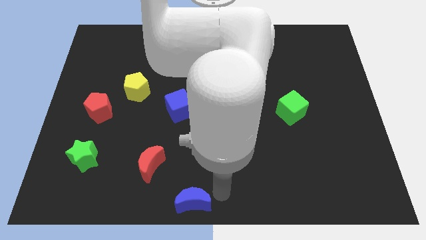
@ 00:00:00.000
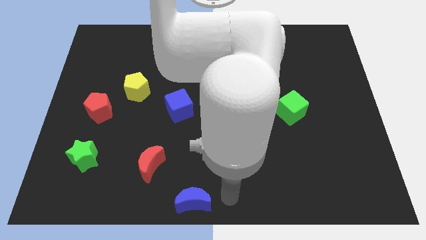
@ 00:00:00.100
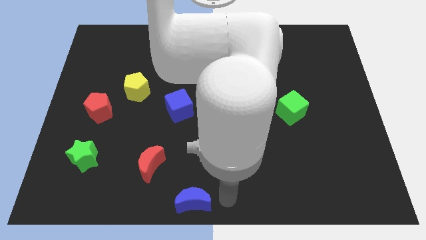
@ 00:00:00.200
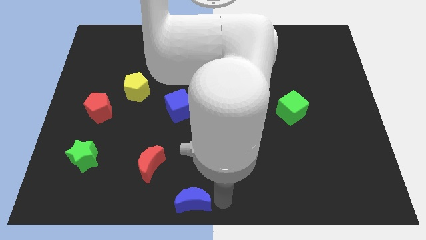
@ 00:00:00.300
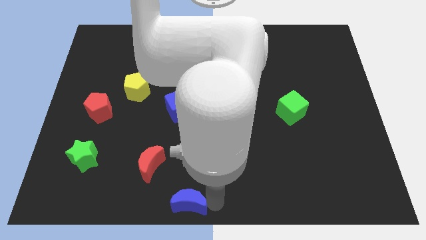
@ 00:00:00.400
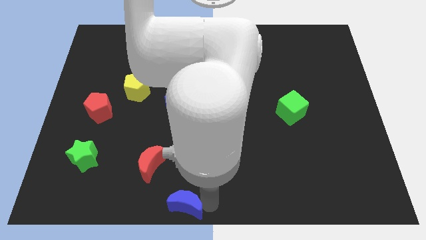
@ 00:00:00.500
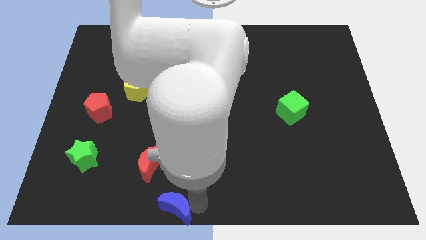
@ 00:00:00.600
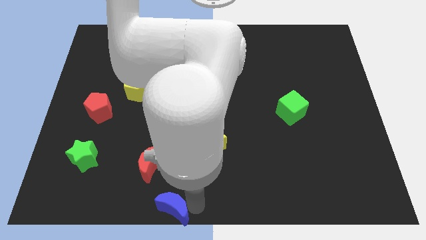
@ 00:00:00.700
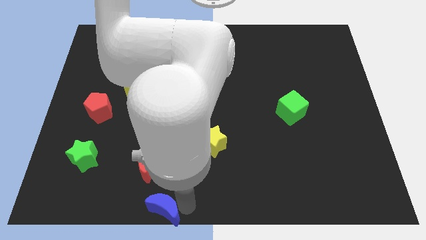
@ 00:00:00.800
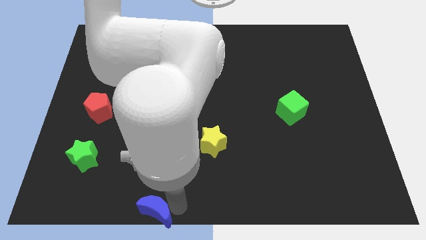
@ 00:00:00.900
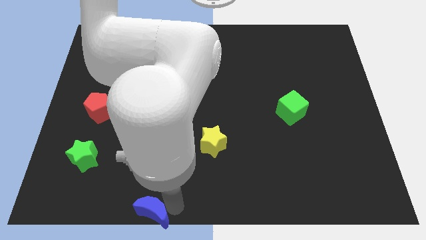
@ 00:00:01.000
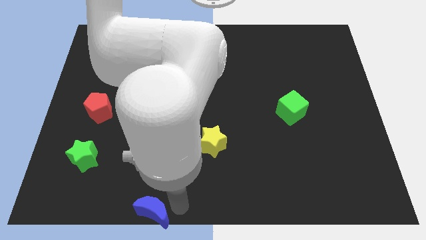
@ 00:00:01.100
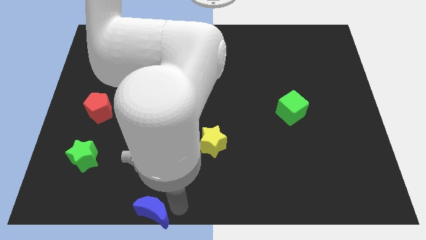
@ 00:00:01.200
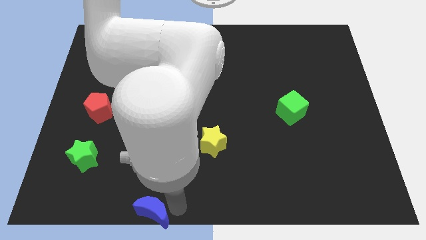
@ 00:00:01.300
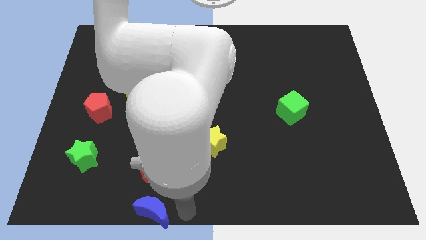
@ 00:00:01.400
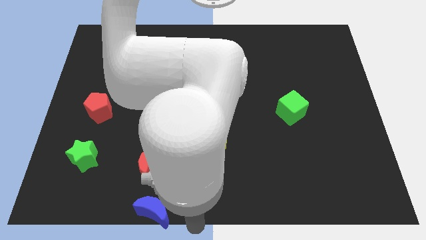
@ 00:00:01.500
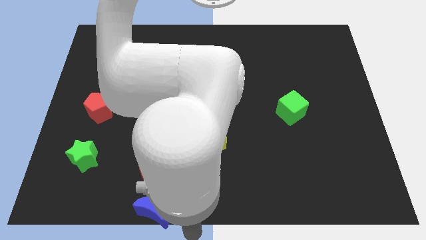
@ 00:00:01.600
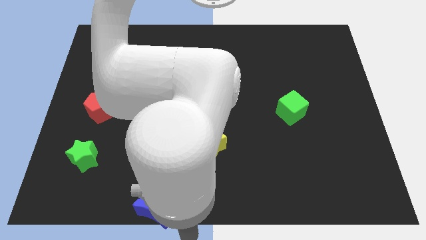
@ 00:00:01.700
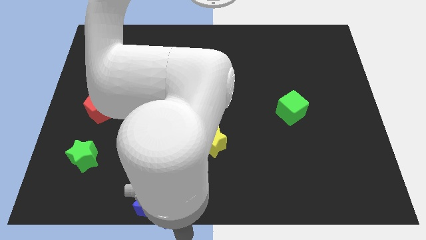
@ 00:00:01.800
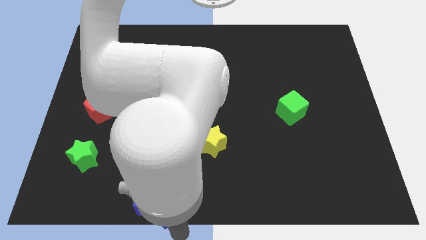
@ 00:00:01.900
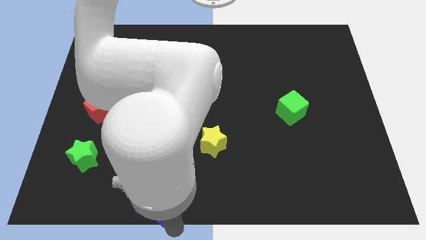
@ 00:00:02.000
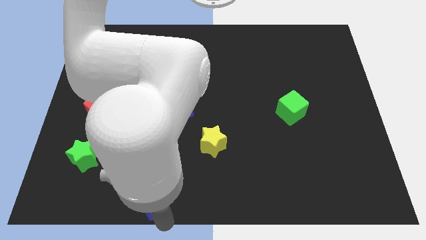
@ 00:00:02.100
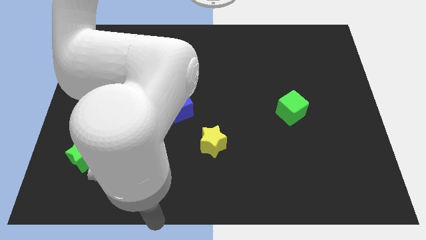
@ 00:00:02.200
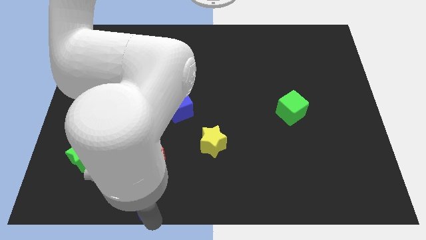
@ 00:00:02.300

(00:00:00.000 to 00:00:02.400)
place the blue moon below the red moon

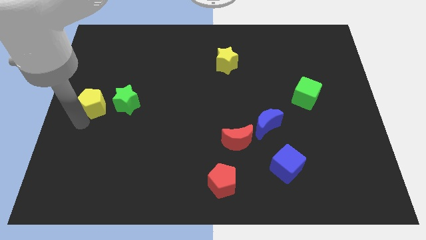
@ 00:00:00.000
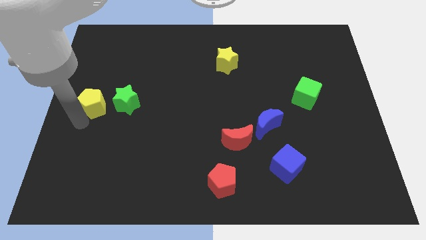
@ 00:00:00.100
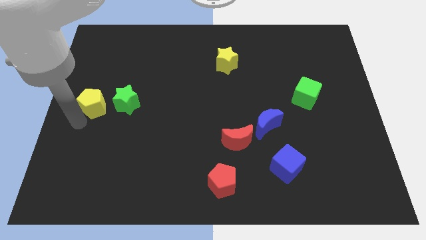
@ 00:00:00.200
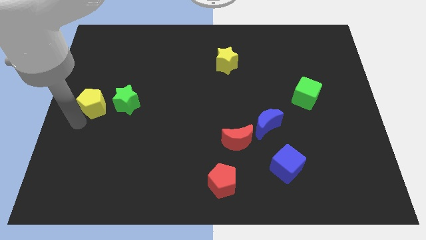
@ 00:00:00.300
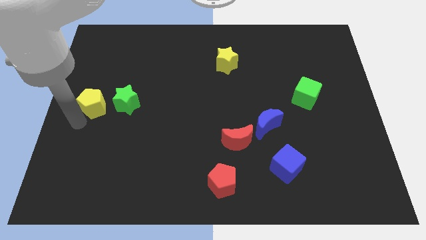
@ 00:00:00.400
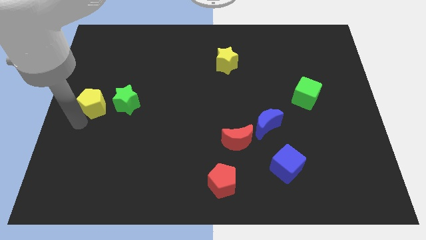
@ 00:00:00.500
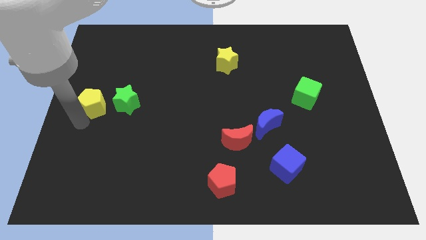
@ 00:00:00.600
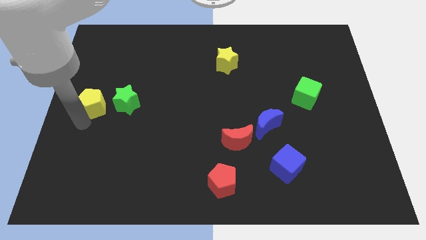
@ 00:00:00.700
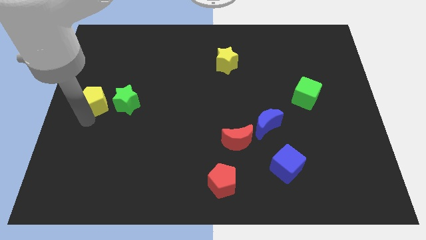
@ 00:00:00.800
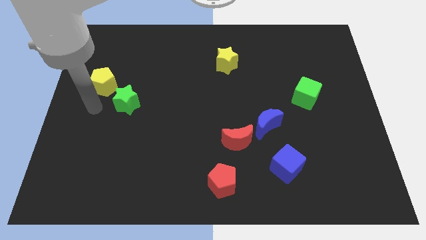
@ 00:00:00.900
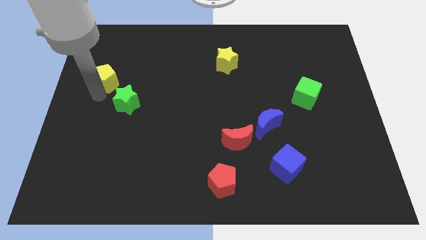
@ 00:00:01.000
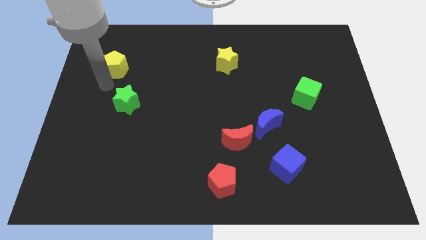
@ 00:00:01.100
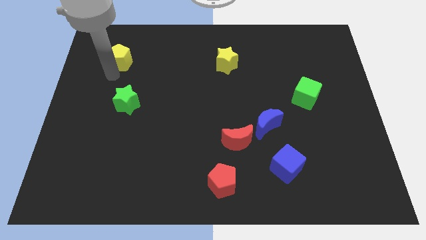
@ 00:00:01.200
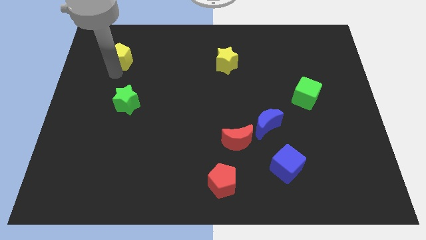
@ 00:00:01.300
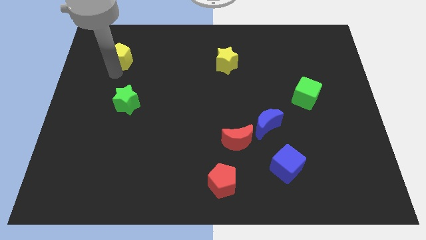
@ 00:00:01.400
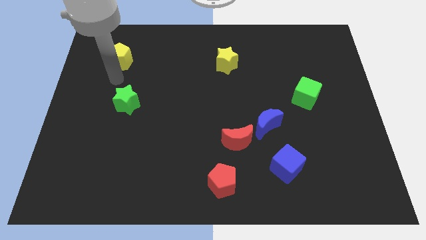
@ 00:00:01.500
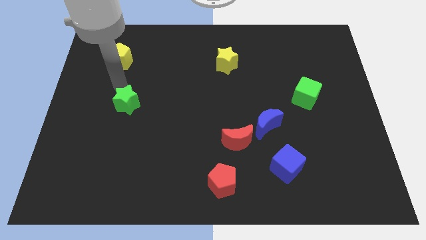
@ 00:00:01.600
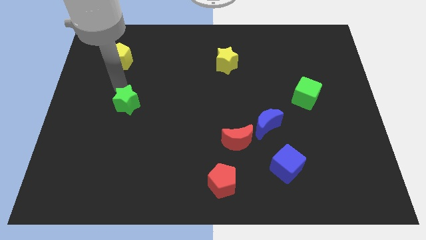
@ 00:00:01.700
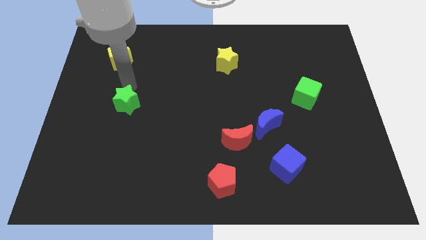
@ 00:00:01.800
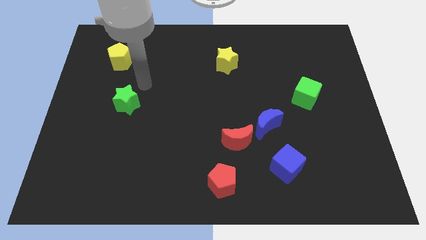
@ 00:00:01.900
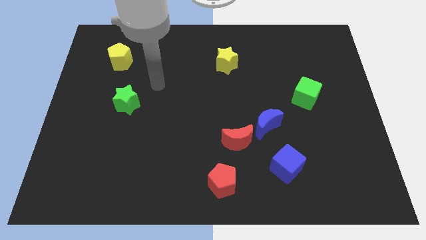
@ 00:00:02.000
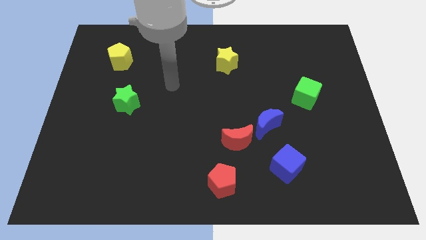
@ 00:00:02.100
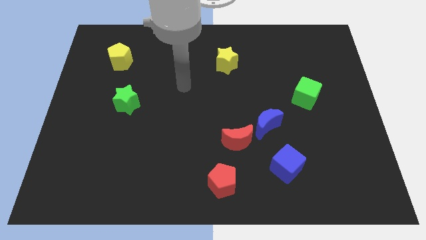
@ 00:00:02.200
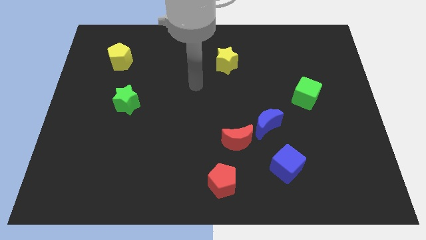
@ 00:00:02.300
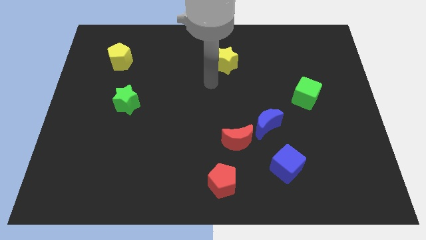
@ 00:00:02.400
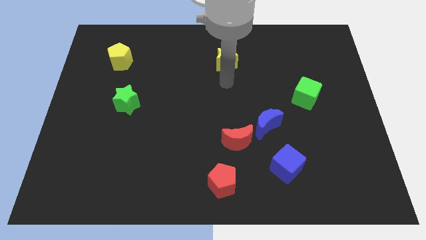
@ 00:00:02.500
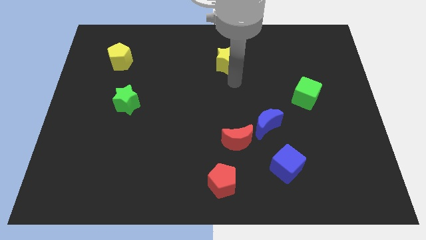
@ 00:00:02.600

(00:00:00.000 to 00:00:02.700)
push the yellow pentagon to the top of the green star vertically

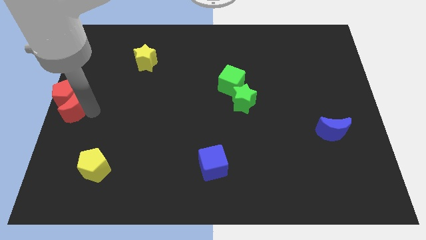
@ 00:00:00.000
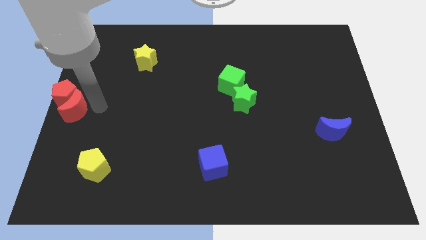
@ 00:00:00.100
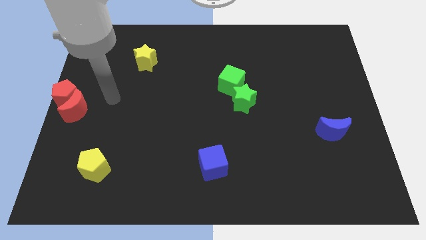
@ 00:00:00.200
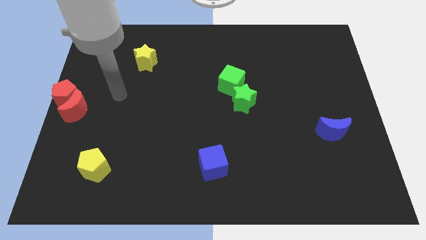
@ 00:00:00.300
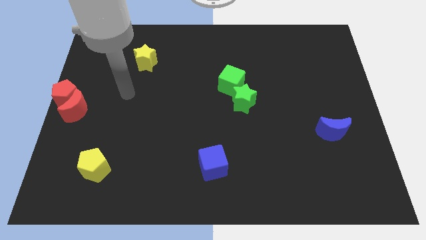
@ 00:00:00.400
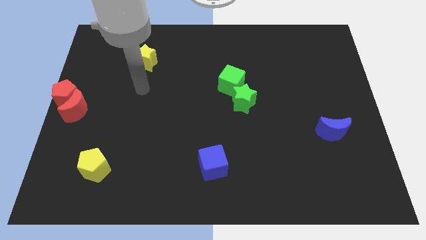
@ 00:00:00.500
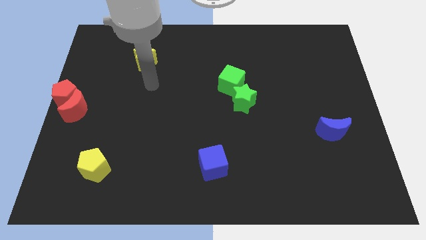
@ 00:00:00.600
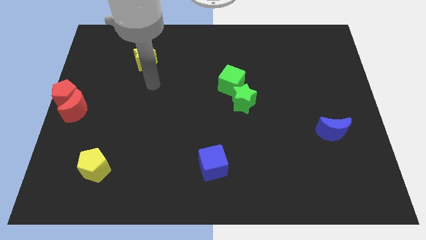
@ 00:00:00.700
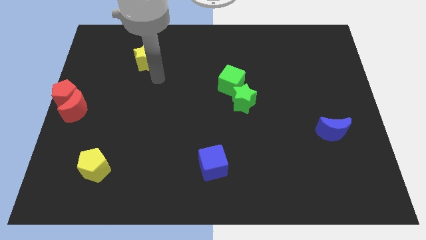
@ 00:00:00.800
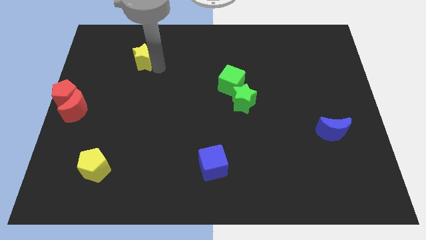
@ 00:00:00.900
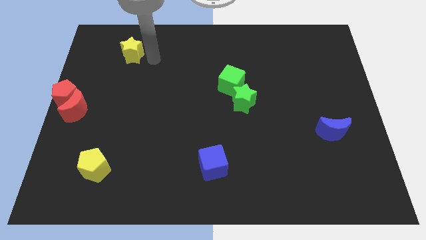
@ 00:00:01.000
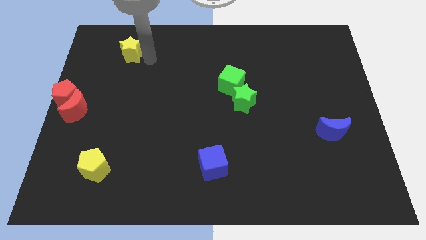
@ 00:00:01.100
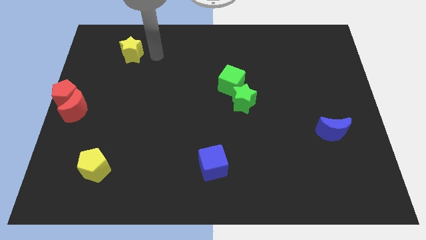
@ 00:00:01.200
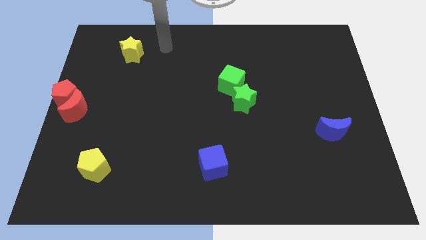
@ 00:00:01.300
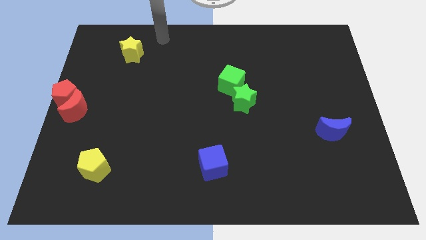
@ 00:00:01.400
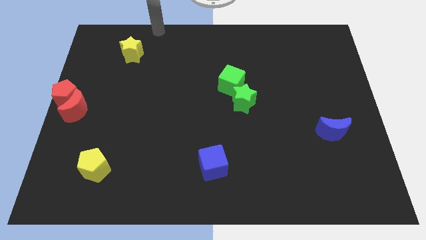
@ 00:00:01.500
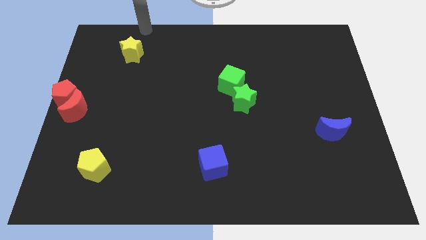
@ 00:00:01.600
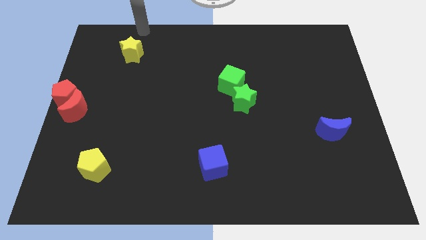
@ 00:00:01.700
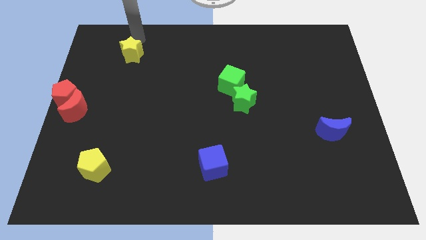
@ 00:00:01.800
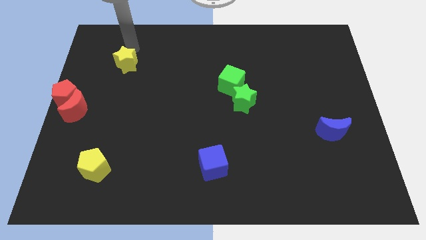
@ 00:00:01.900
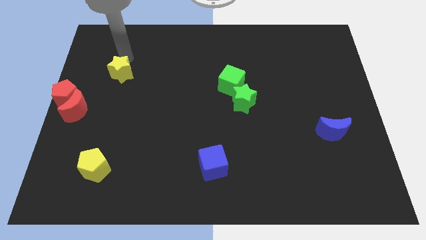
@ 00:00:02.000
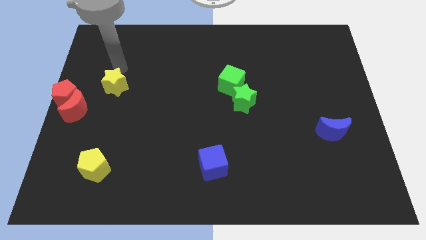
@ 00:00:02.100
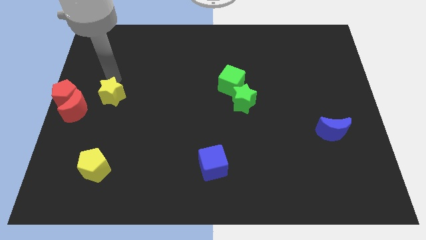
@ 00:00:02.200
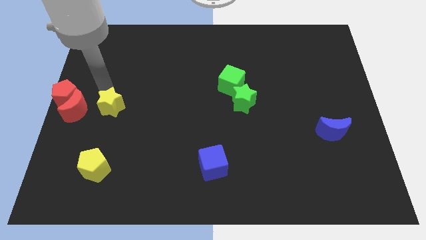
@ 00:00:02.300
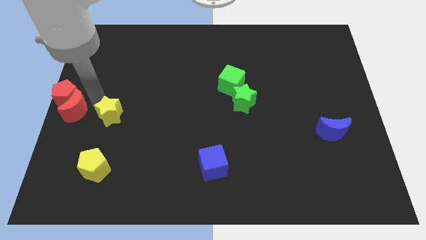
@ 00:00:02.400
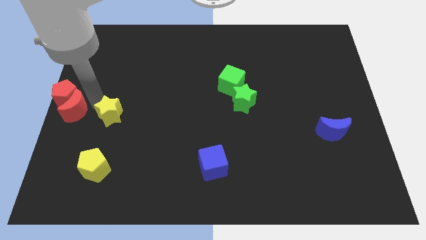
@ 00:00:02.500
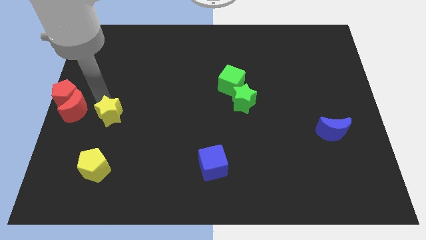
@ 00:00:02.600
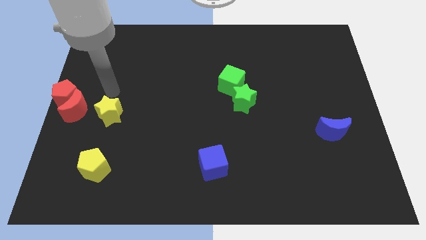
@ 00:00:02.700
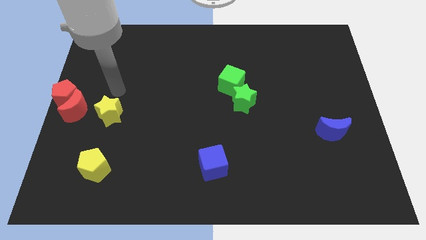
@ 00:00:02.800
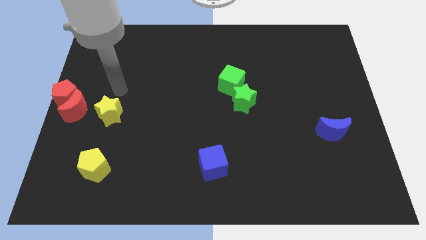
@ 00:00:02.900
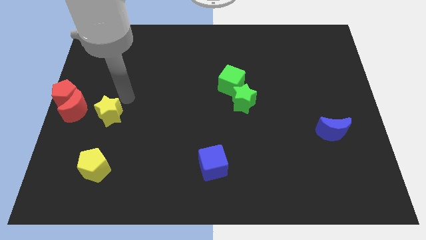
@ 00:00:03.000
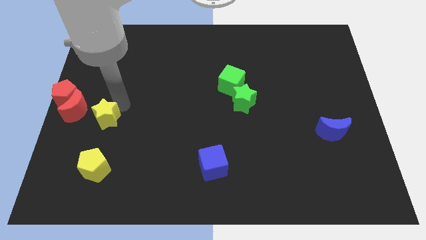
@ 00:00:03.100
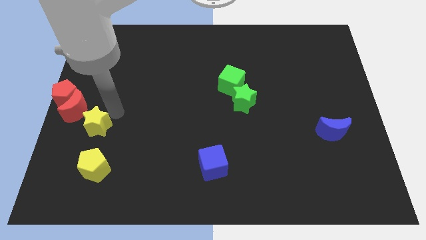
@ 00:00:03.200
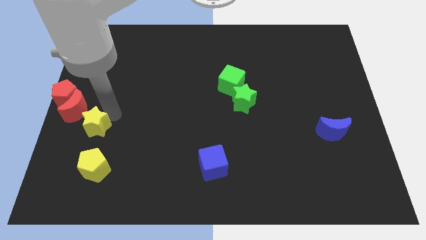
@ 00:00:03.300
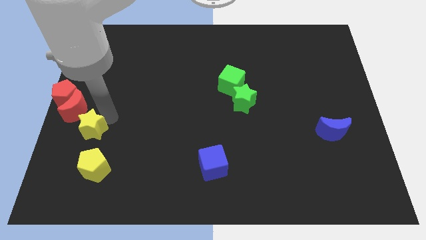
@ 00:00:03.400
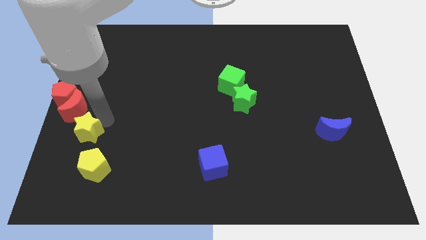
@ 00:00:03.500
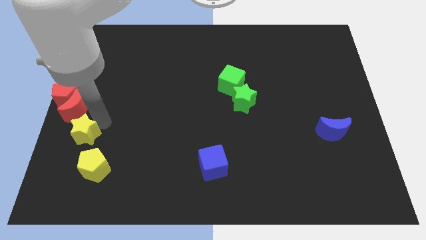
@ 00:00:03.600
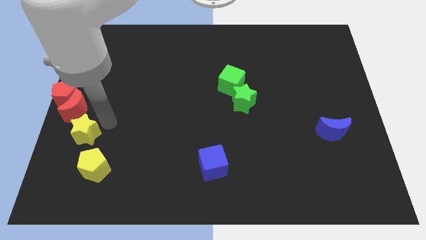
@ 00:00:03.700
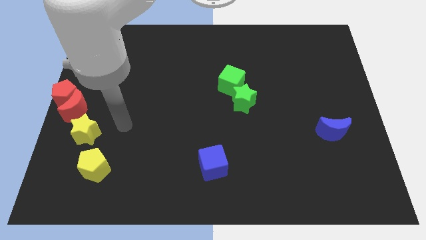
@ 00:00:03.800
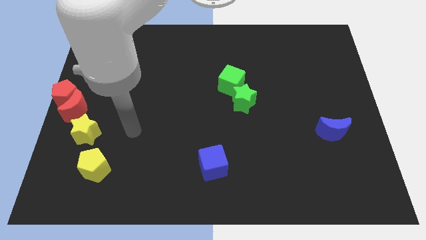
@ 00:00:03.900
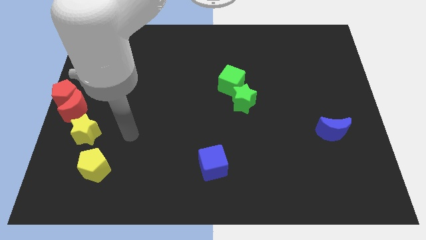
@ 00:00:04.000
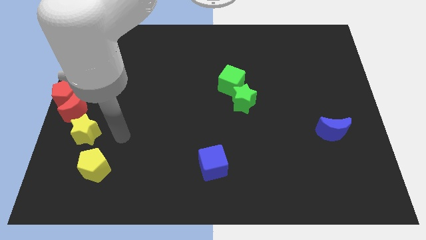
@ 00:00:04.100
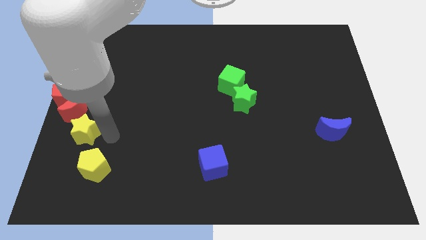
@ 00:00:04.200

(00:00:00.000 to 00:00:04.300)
place the yellow star in between yellow pentagon and red crescent
